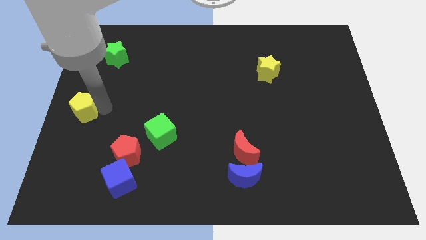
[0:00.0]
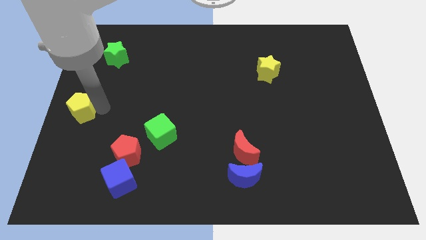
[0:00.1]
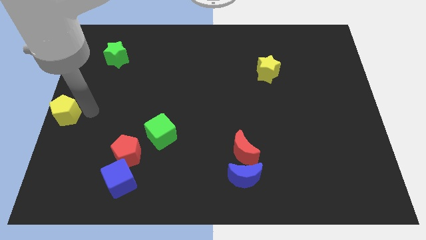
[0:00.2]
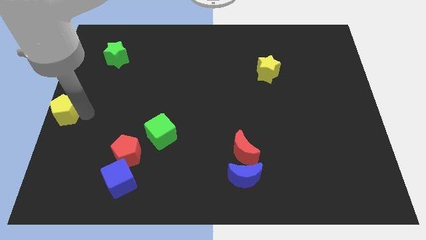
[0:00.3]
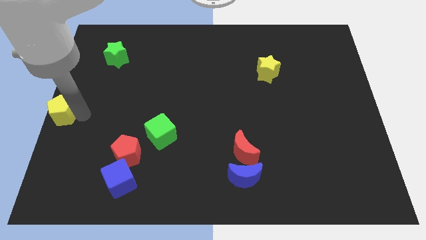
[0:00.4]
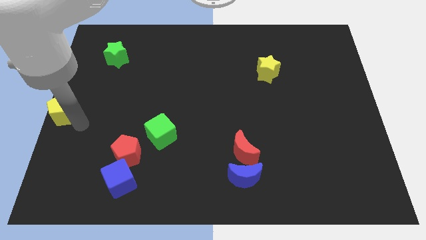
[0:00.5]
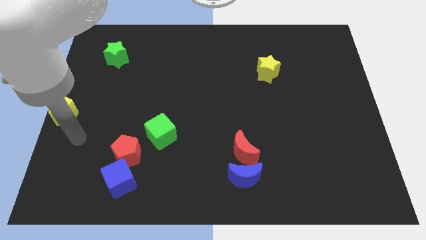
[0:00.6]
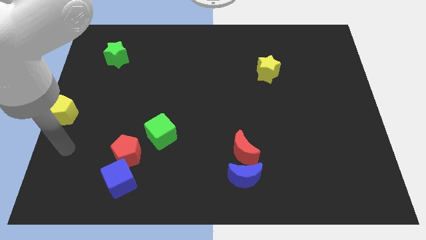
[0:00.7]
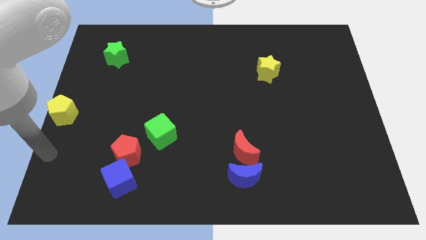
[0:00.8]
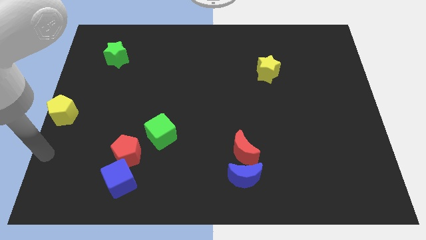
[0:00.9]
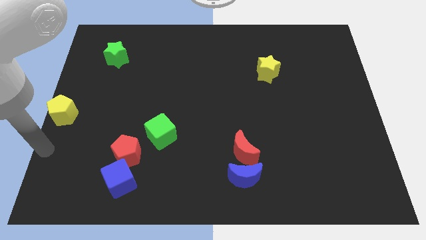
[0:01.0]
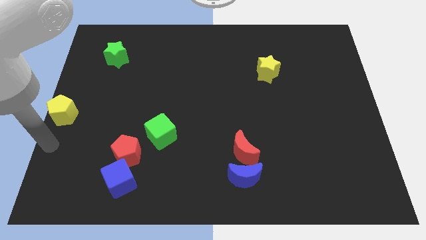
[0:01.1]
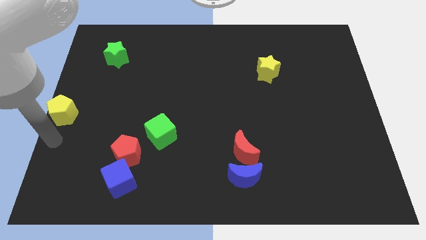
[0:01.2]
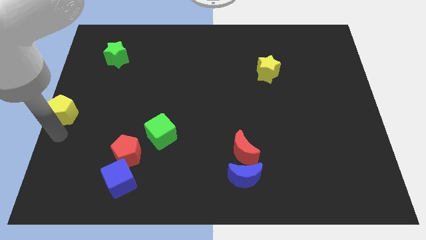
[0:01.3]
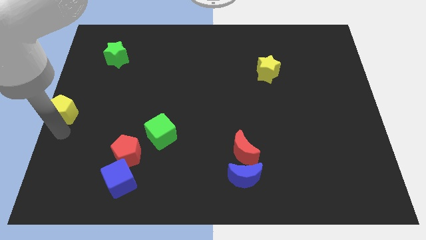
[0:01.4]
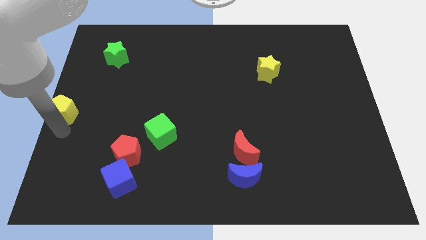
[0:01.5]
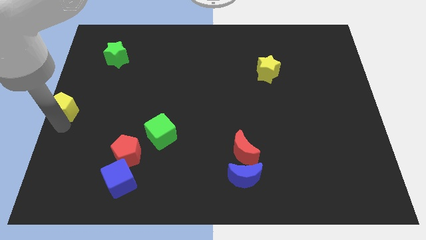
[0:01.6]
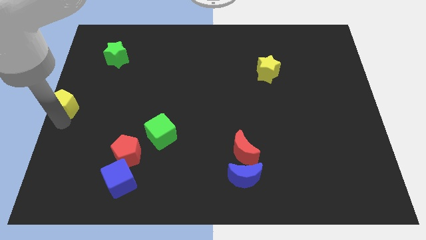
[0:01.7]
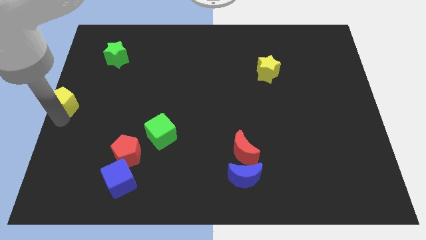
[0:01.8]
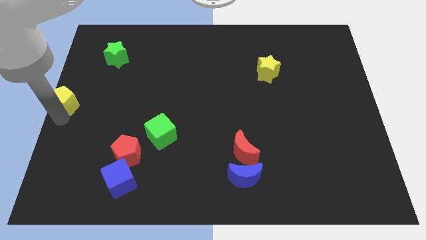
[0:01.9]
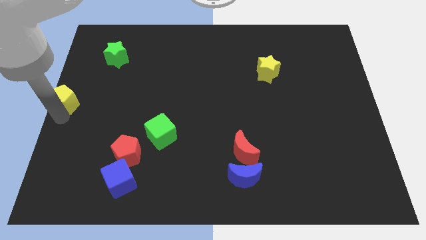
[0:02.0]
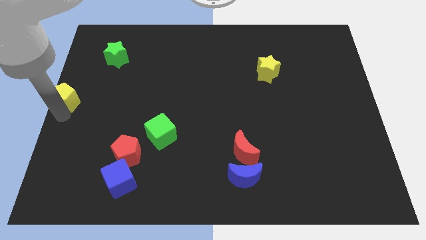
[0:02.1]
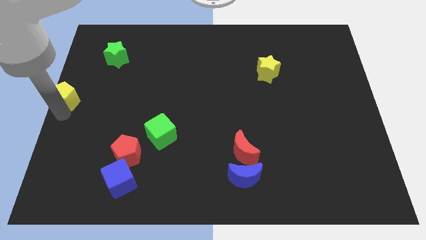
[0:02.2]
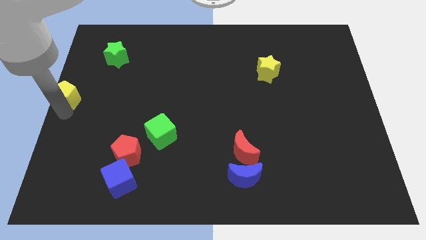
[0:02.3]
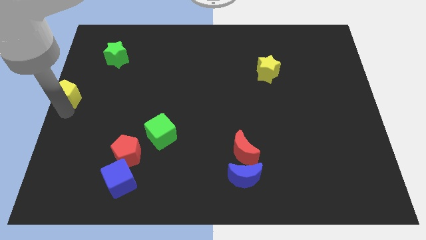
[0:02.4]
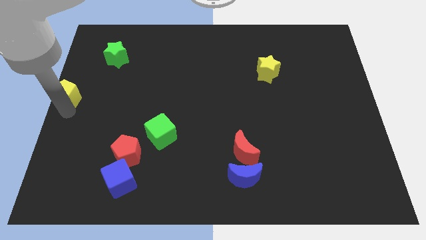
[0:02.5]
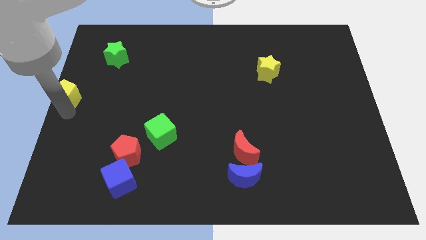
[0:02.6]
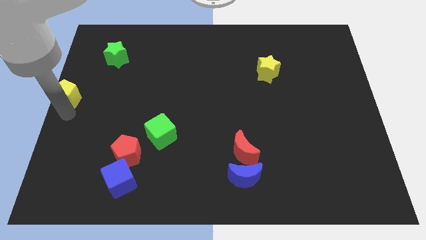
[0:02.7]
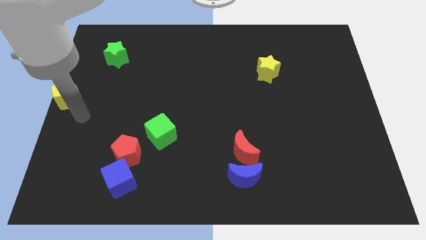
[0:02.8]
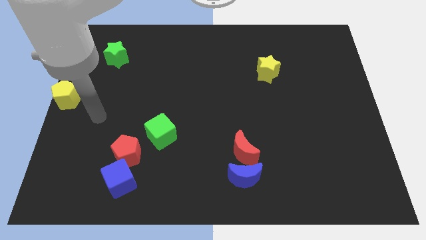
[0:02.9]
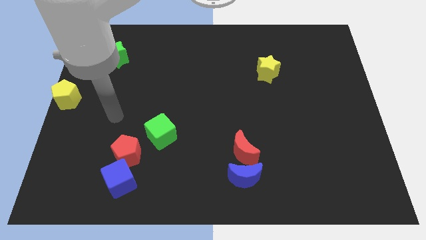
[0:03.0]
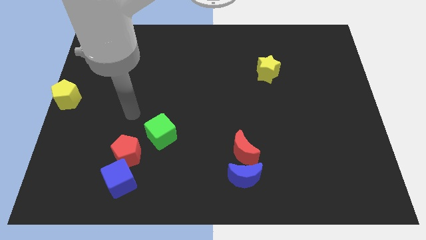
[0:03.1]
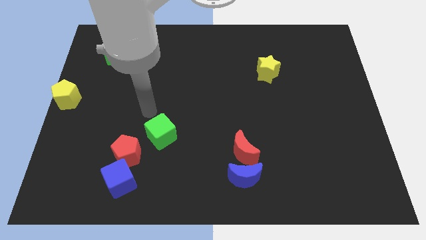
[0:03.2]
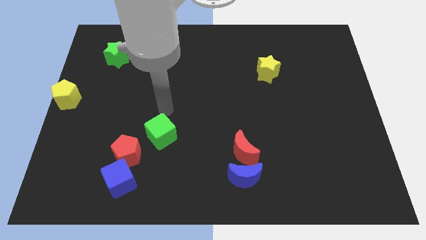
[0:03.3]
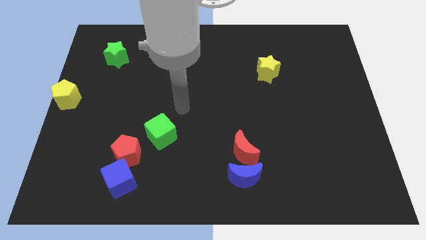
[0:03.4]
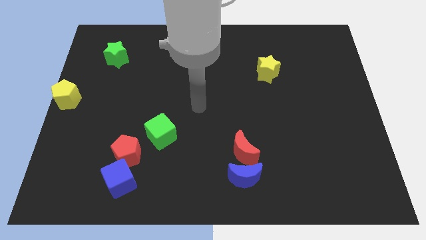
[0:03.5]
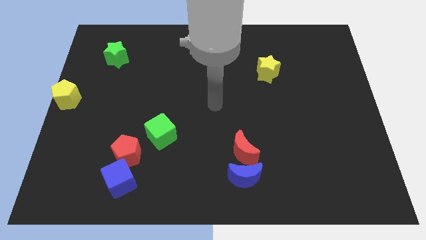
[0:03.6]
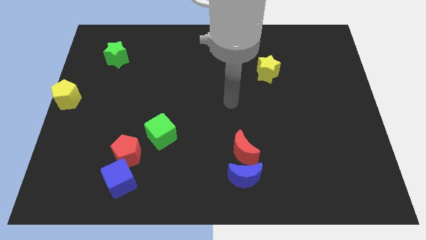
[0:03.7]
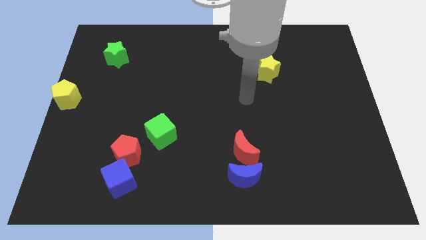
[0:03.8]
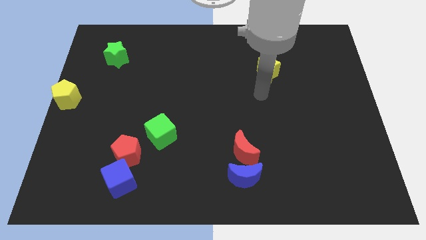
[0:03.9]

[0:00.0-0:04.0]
push the yellow pentagon slightly to the top left of the board

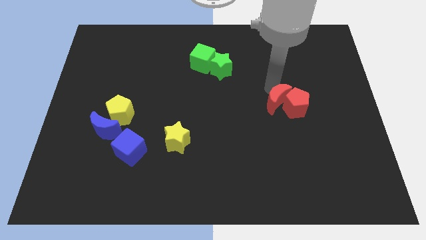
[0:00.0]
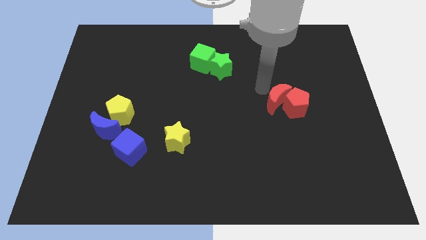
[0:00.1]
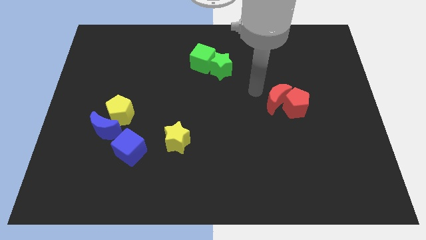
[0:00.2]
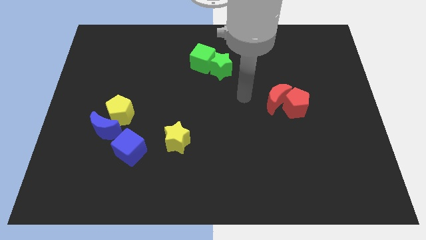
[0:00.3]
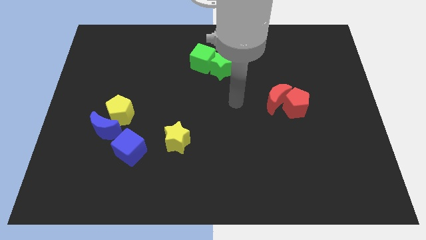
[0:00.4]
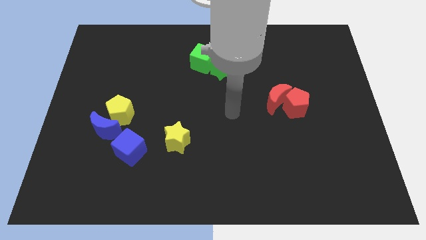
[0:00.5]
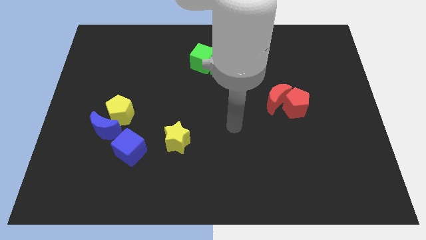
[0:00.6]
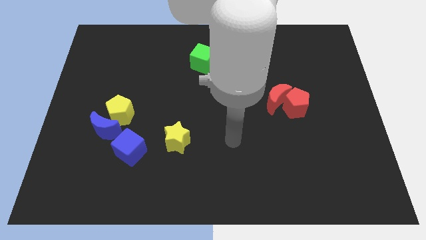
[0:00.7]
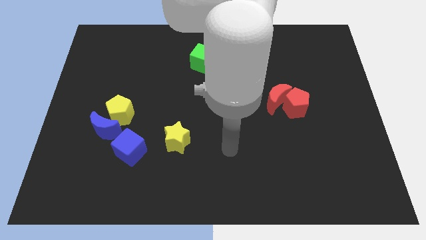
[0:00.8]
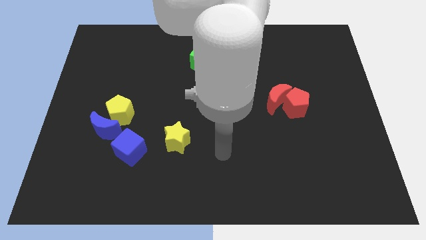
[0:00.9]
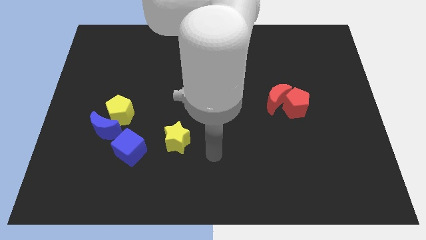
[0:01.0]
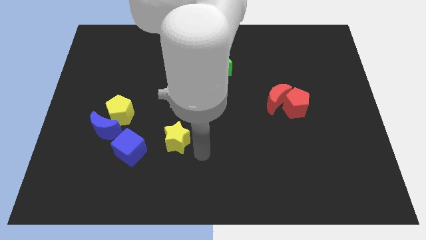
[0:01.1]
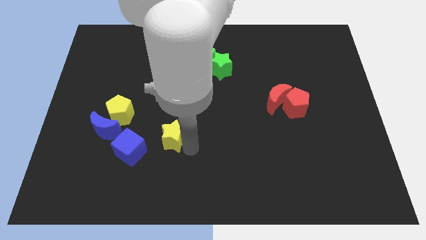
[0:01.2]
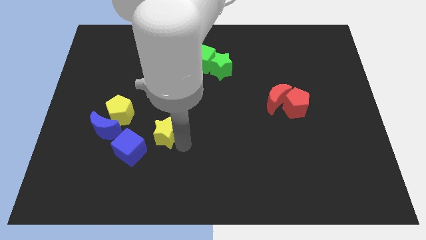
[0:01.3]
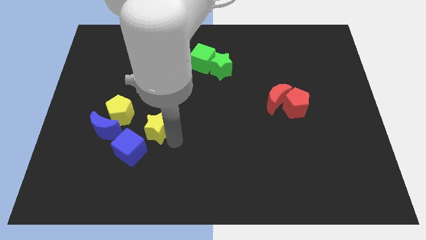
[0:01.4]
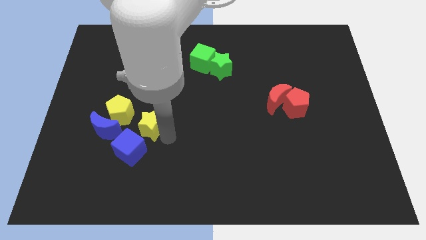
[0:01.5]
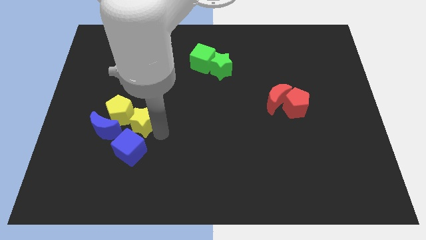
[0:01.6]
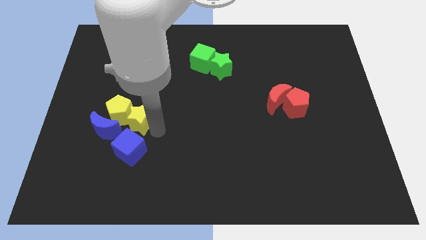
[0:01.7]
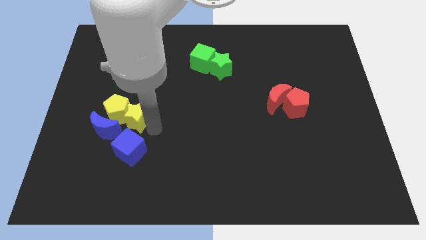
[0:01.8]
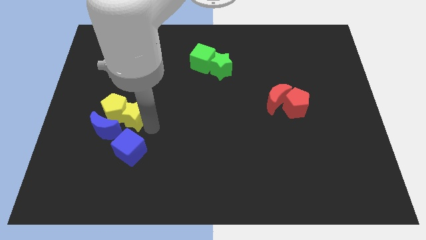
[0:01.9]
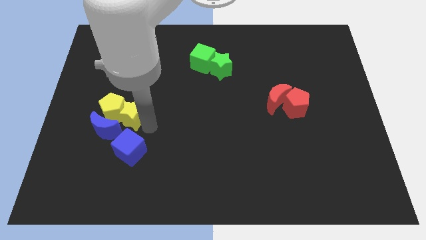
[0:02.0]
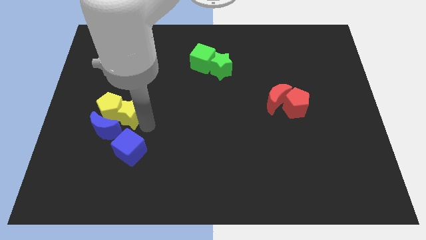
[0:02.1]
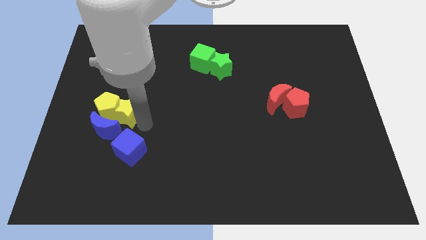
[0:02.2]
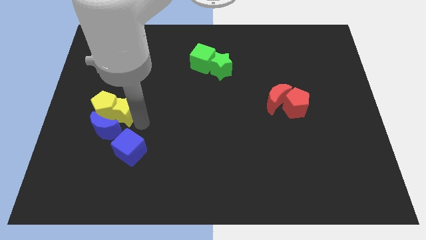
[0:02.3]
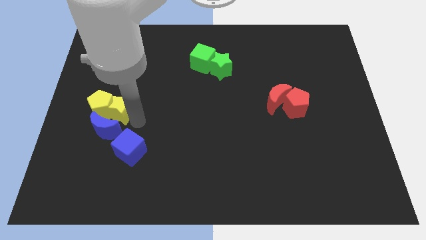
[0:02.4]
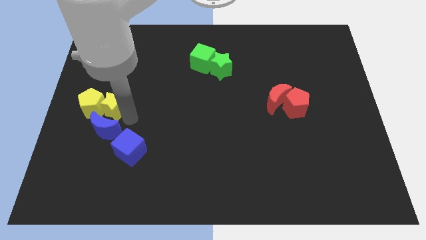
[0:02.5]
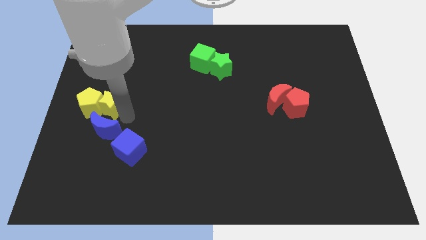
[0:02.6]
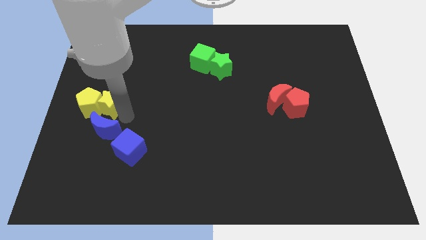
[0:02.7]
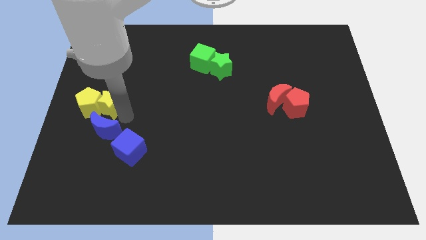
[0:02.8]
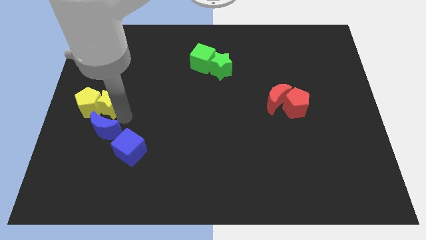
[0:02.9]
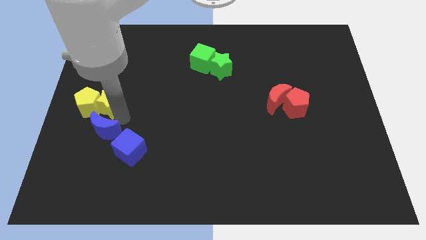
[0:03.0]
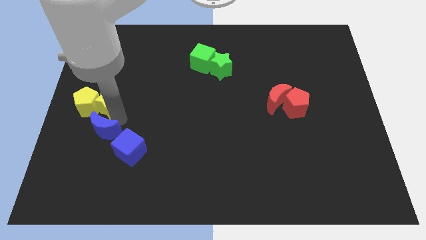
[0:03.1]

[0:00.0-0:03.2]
place the yellow blocks at the center left side of the board

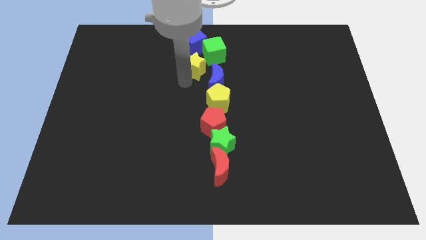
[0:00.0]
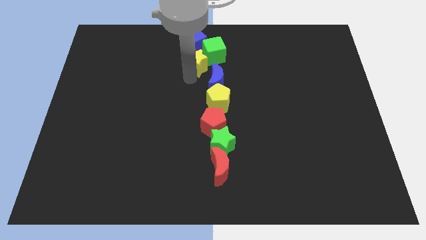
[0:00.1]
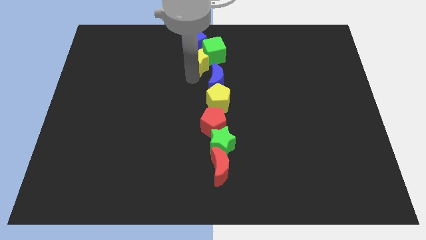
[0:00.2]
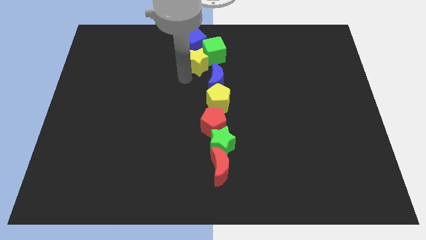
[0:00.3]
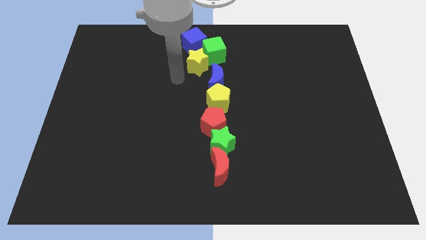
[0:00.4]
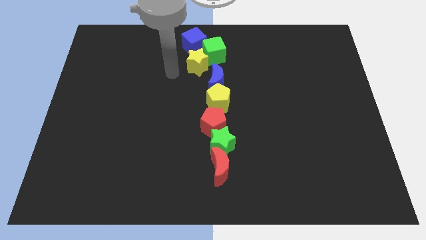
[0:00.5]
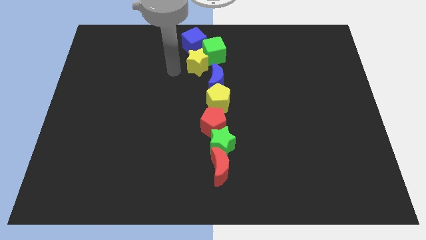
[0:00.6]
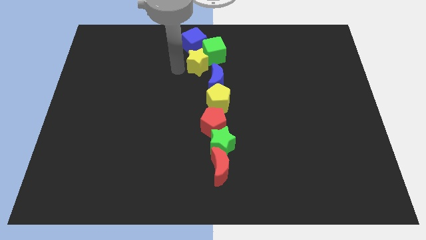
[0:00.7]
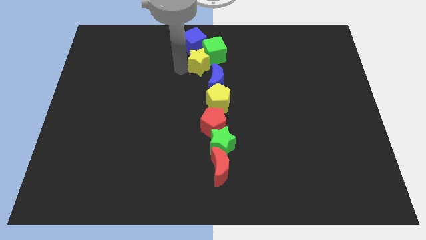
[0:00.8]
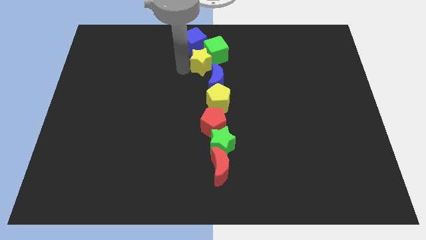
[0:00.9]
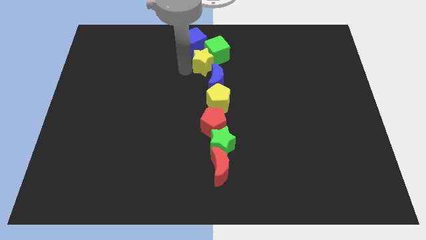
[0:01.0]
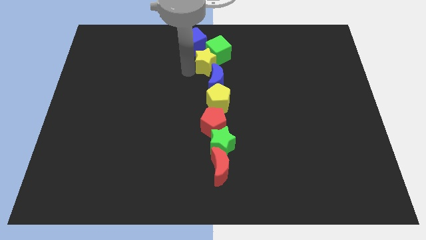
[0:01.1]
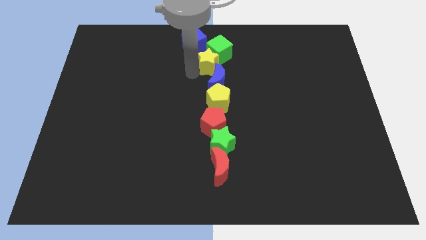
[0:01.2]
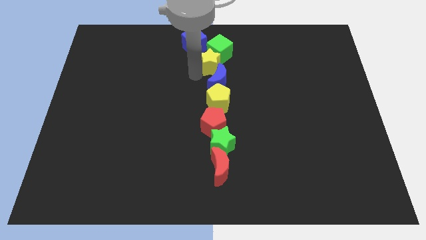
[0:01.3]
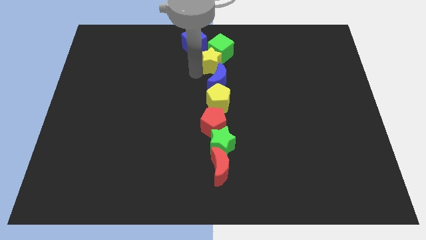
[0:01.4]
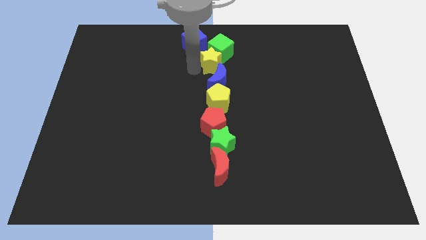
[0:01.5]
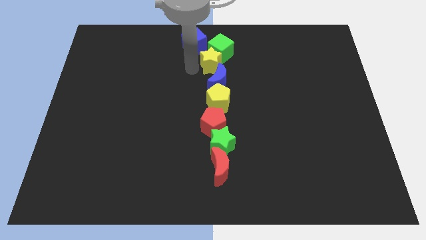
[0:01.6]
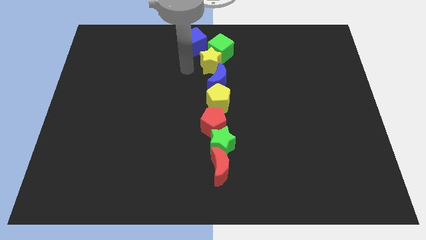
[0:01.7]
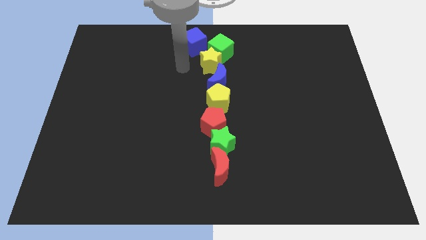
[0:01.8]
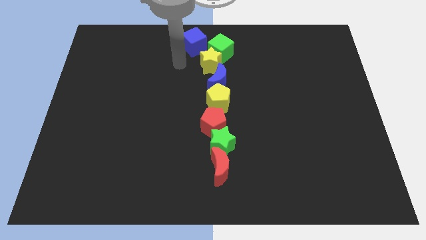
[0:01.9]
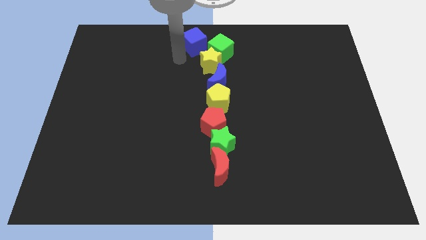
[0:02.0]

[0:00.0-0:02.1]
put the yellow star below the green cube
